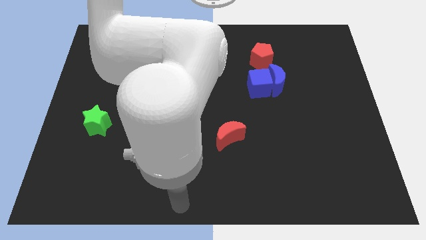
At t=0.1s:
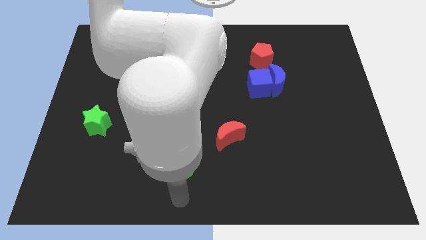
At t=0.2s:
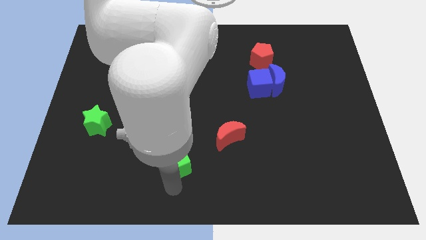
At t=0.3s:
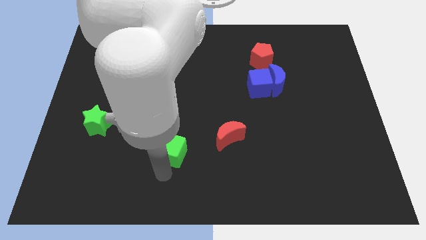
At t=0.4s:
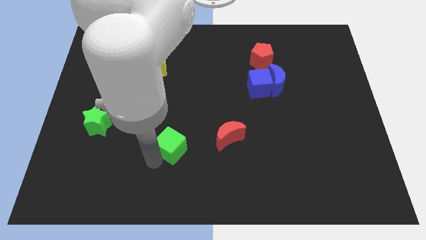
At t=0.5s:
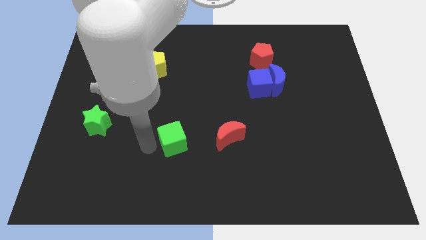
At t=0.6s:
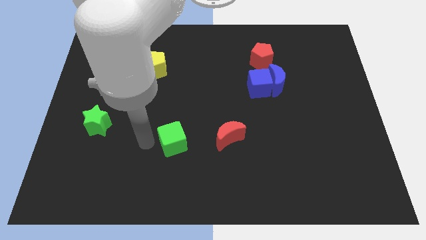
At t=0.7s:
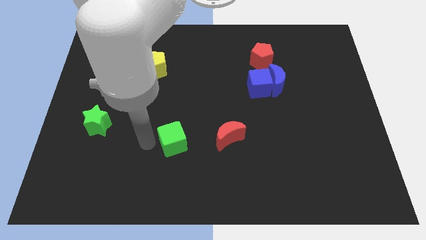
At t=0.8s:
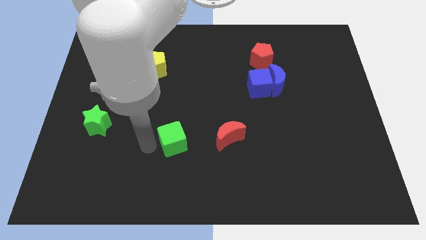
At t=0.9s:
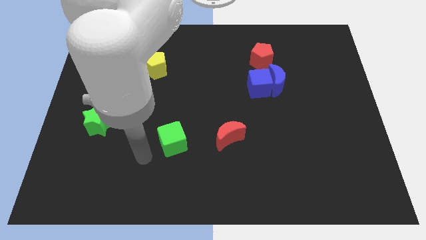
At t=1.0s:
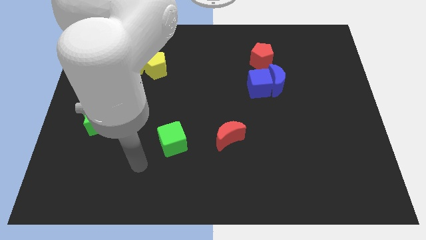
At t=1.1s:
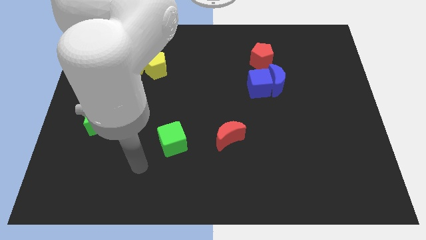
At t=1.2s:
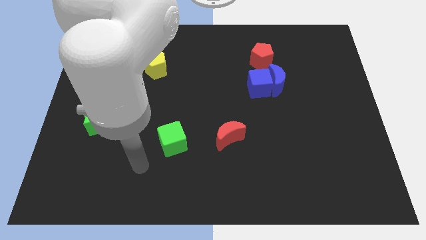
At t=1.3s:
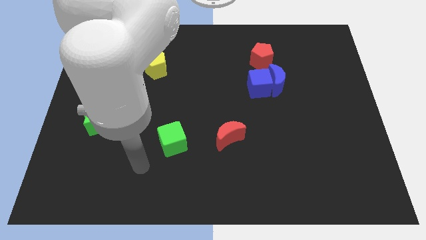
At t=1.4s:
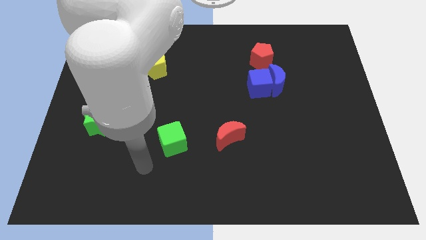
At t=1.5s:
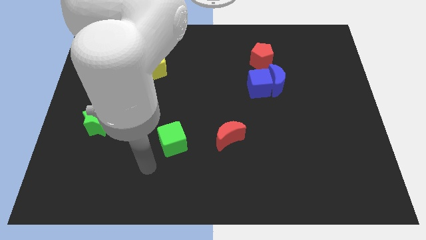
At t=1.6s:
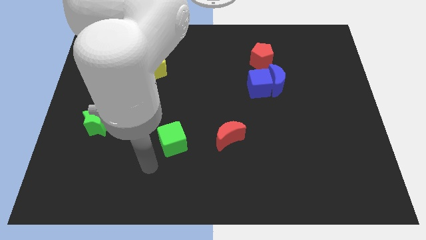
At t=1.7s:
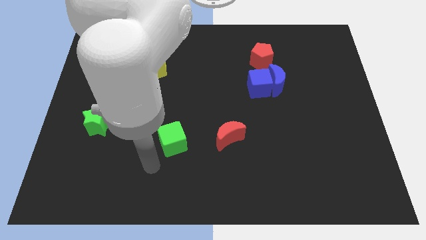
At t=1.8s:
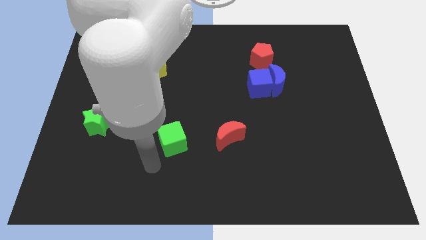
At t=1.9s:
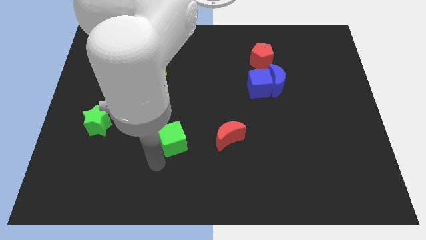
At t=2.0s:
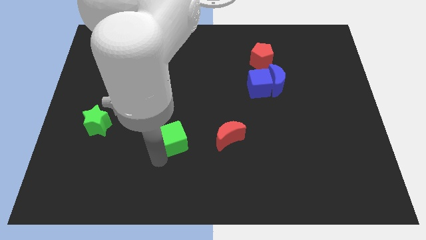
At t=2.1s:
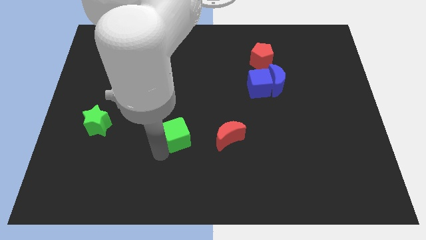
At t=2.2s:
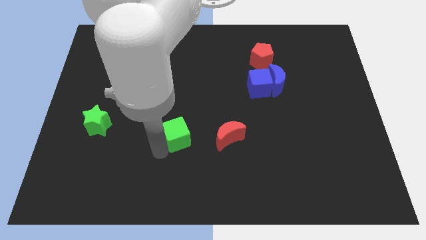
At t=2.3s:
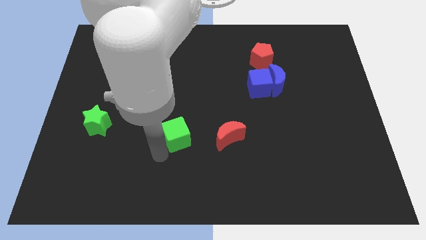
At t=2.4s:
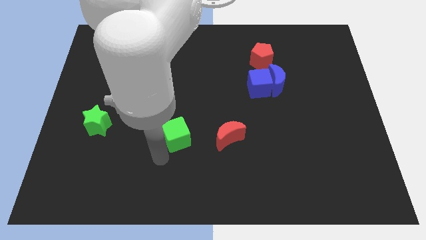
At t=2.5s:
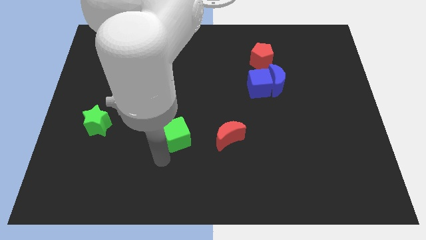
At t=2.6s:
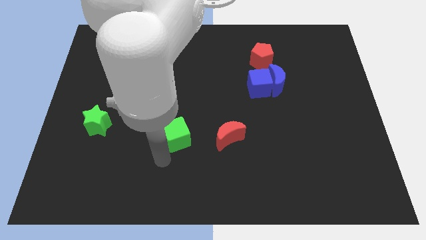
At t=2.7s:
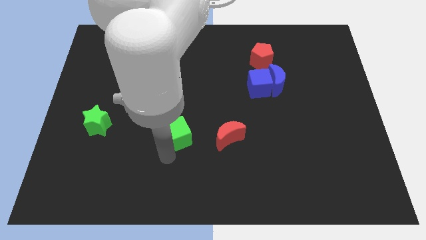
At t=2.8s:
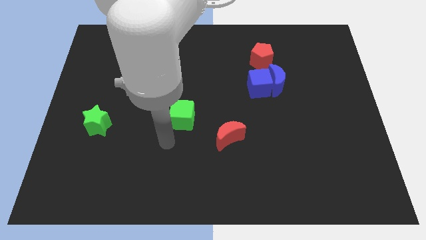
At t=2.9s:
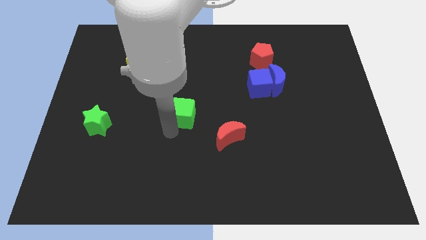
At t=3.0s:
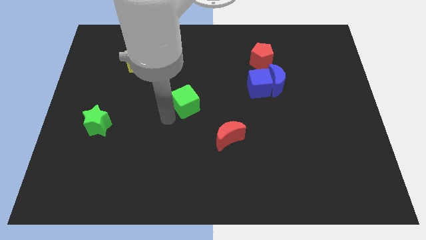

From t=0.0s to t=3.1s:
move the green cube to the top left of the red crescent

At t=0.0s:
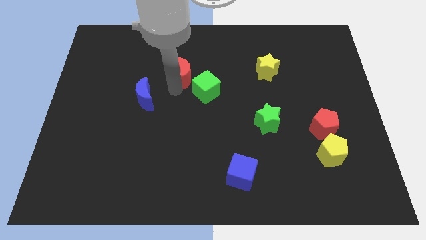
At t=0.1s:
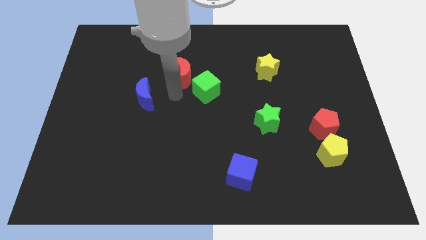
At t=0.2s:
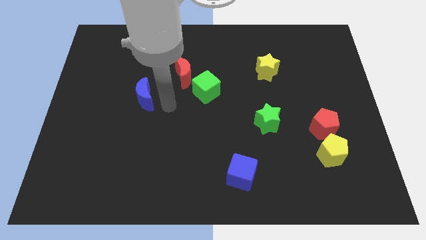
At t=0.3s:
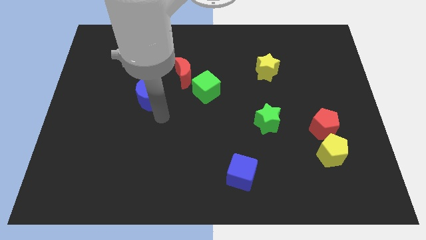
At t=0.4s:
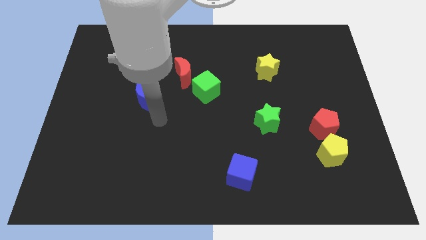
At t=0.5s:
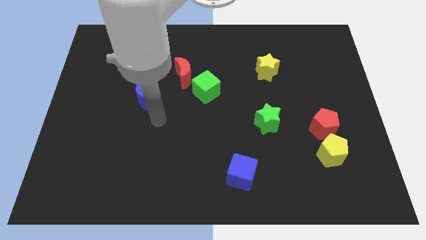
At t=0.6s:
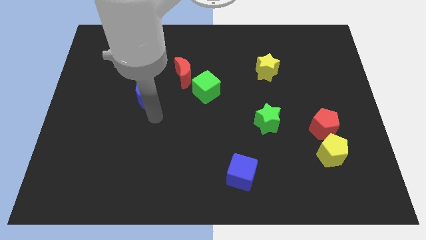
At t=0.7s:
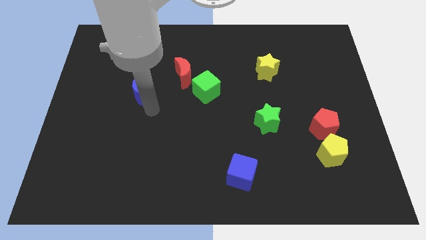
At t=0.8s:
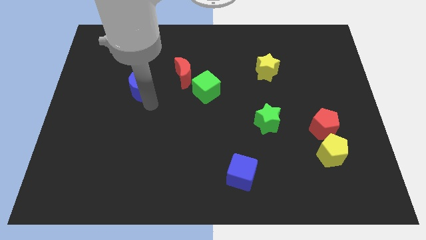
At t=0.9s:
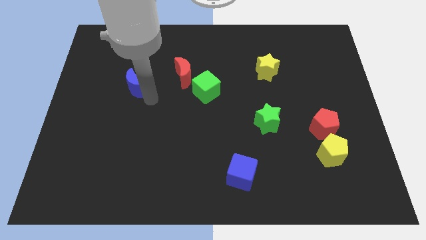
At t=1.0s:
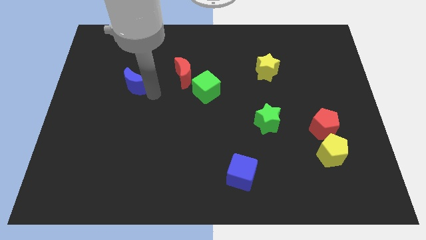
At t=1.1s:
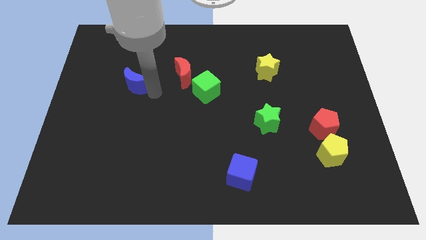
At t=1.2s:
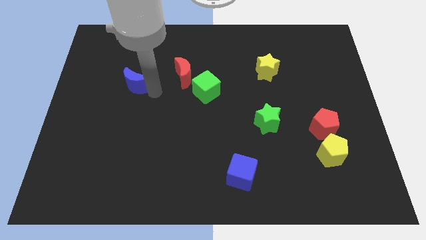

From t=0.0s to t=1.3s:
move the blue crescent slightly to the top

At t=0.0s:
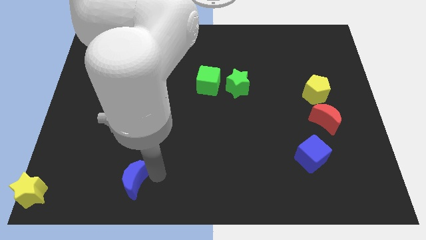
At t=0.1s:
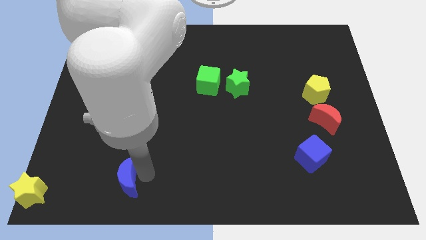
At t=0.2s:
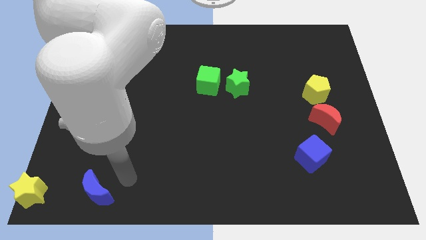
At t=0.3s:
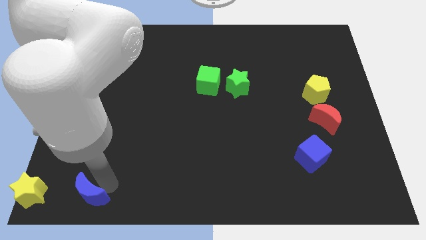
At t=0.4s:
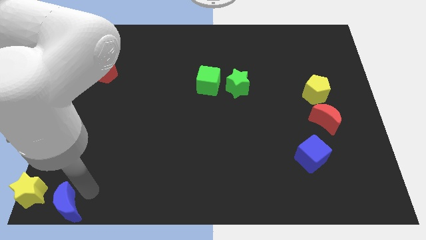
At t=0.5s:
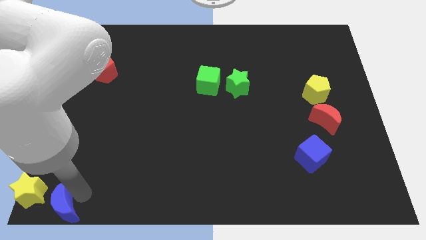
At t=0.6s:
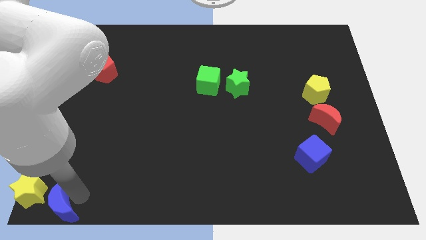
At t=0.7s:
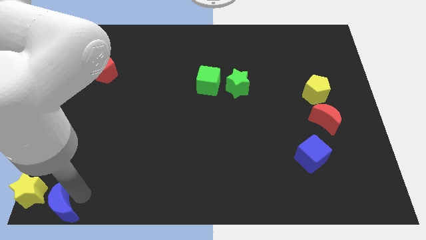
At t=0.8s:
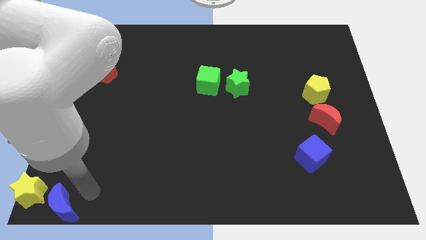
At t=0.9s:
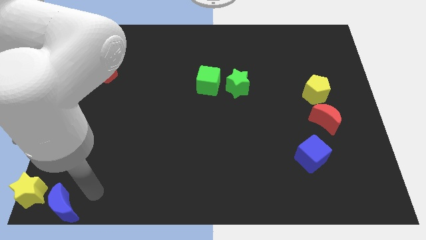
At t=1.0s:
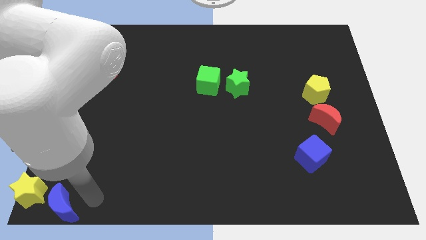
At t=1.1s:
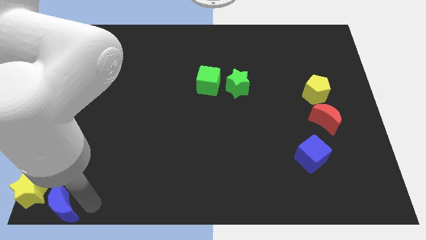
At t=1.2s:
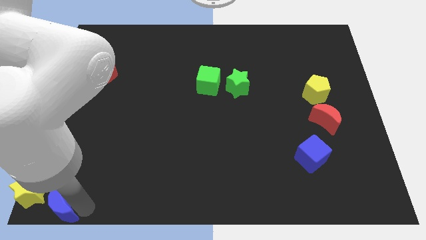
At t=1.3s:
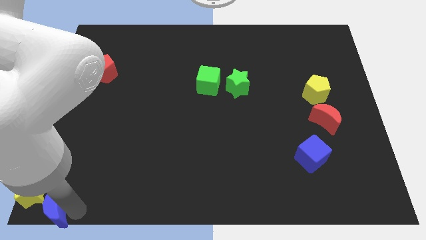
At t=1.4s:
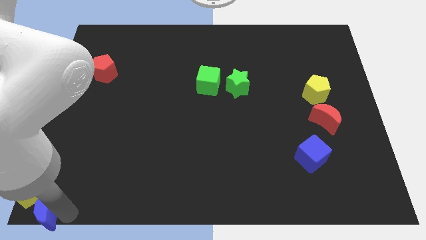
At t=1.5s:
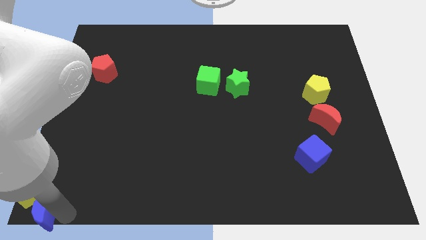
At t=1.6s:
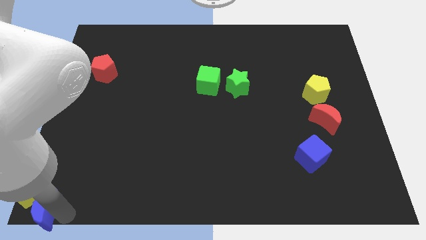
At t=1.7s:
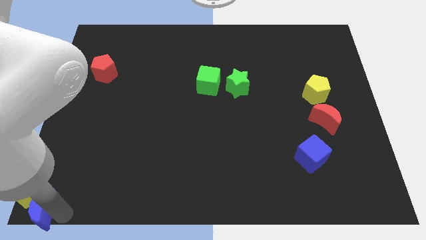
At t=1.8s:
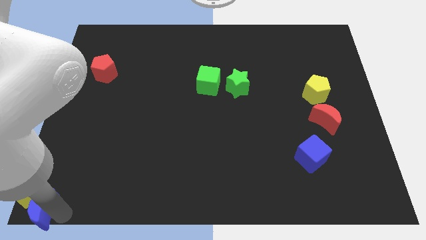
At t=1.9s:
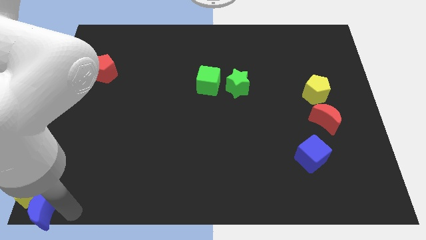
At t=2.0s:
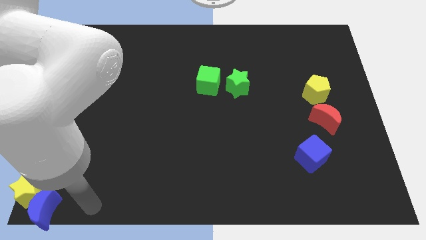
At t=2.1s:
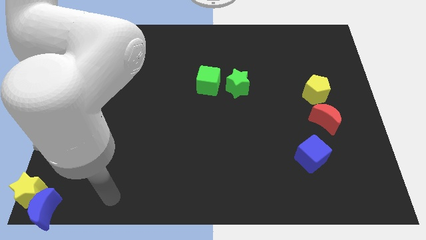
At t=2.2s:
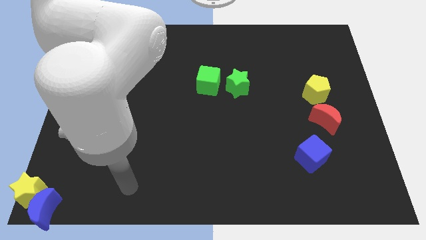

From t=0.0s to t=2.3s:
push the blue moon into the yellow star

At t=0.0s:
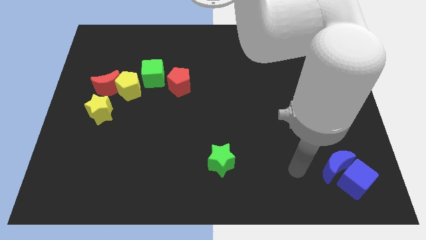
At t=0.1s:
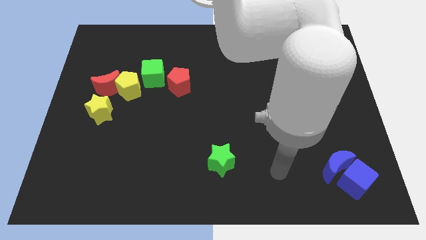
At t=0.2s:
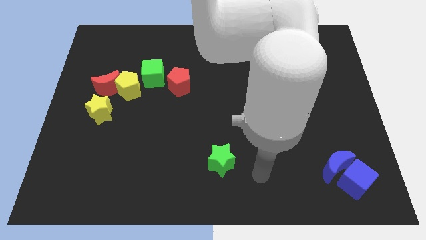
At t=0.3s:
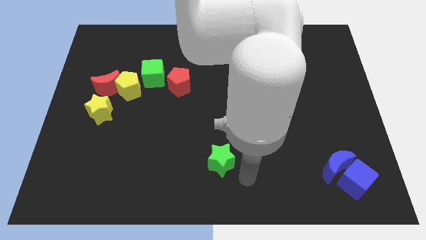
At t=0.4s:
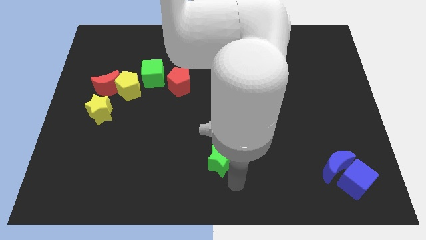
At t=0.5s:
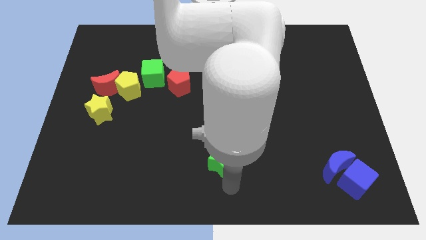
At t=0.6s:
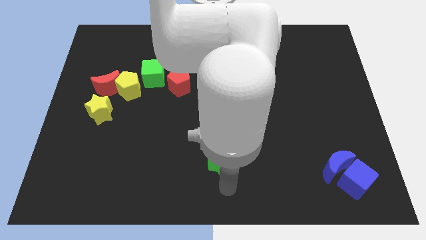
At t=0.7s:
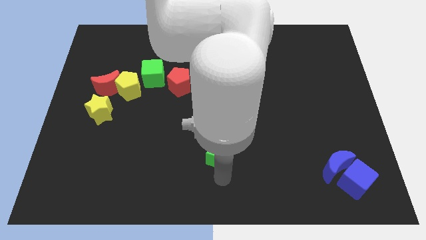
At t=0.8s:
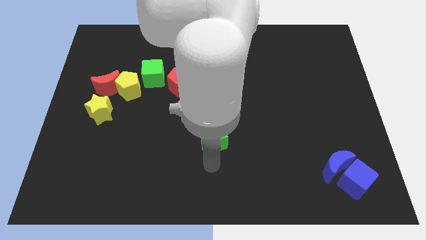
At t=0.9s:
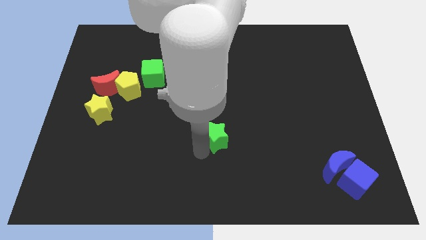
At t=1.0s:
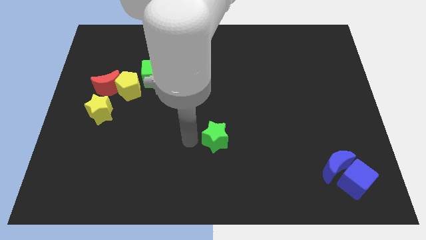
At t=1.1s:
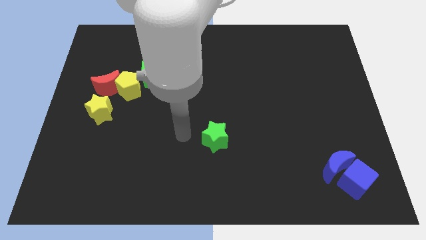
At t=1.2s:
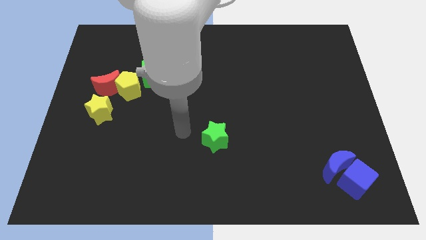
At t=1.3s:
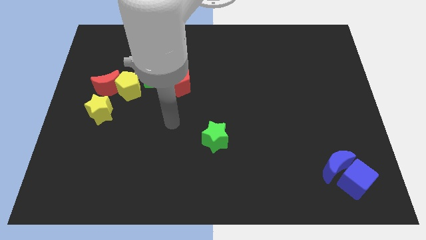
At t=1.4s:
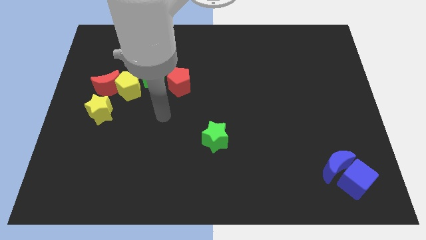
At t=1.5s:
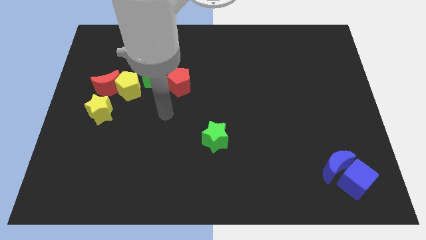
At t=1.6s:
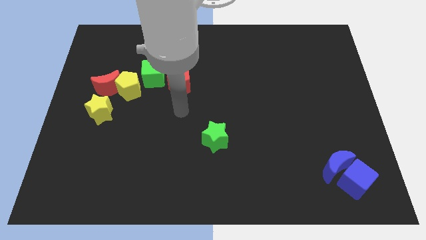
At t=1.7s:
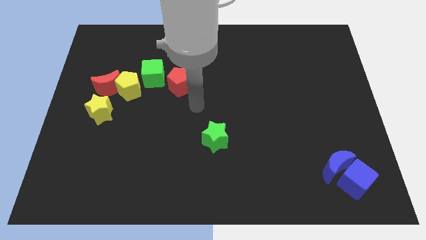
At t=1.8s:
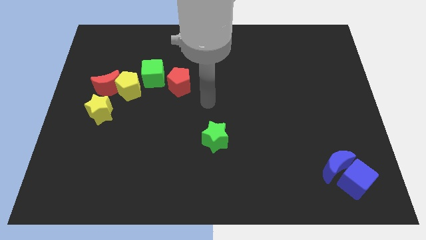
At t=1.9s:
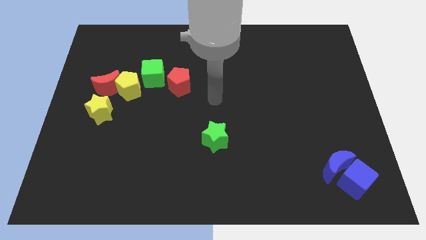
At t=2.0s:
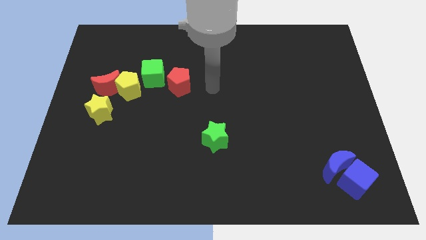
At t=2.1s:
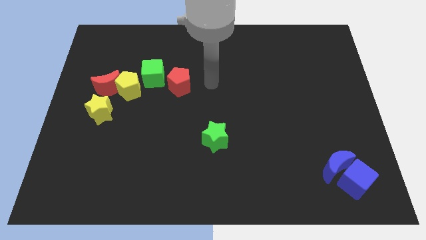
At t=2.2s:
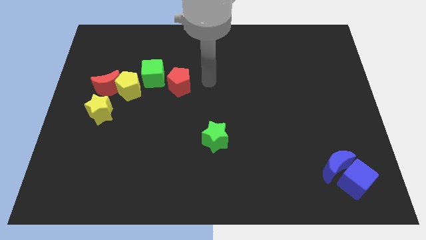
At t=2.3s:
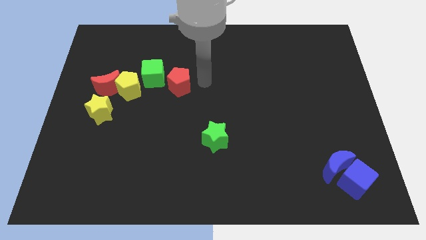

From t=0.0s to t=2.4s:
slightly move the green star towards the top side of the board
